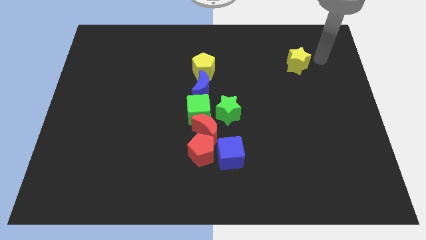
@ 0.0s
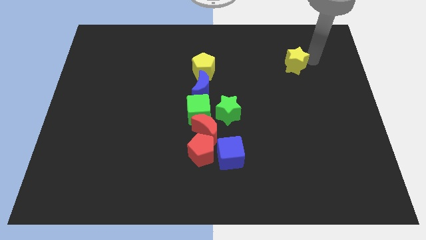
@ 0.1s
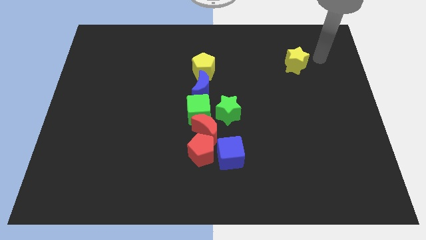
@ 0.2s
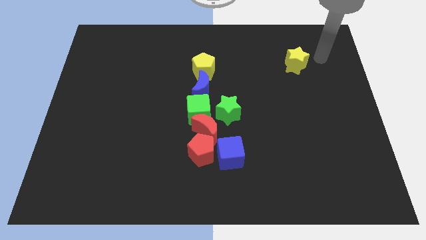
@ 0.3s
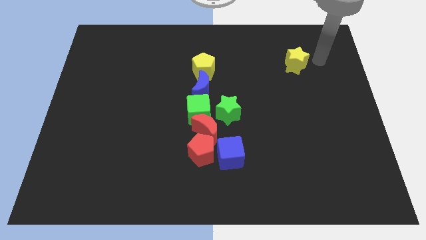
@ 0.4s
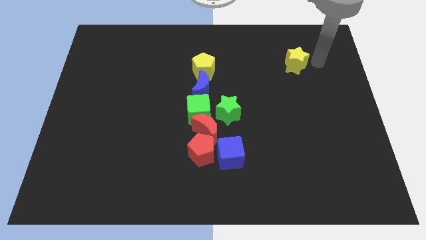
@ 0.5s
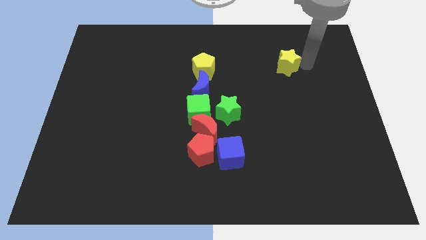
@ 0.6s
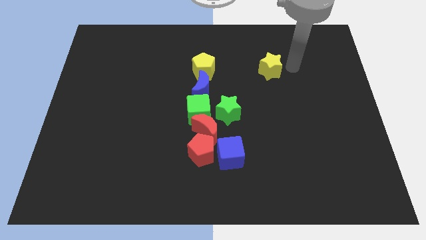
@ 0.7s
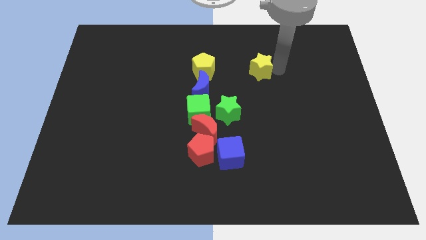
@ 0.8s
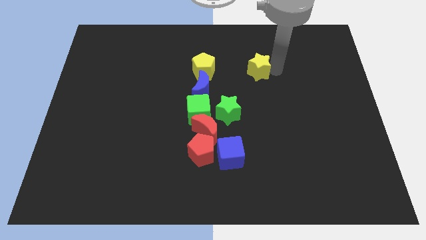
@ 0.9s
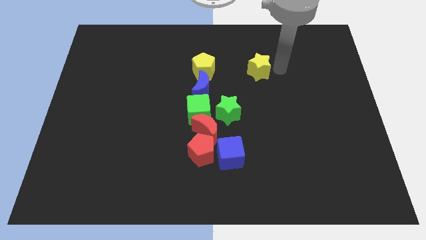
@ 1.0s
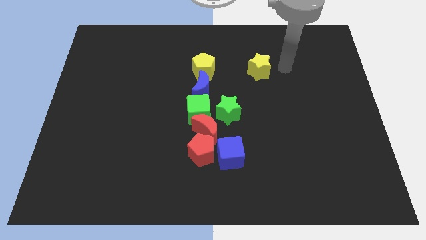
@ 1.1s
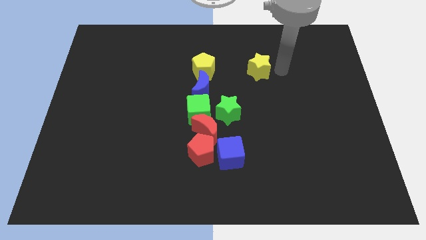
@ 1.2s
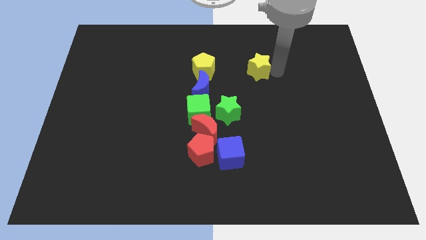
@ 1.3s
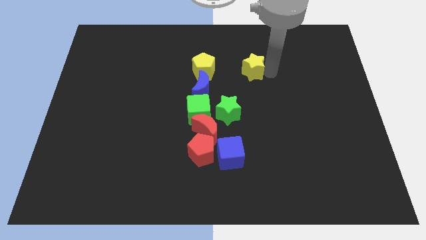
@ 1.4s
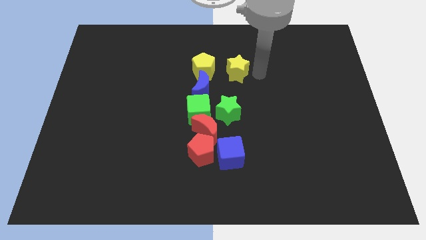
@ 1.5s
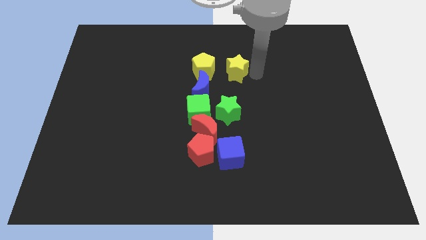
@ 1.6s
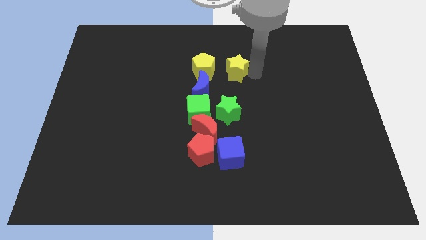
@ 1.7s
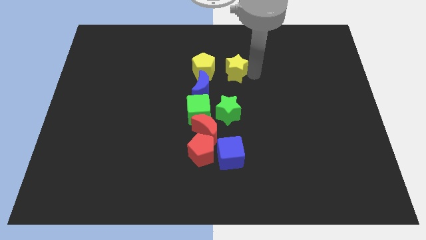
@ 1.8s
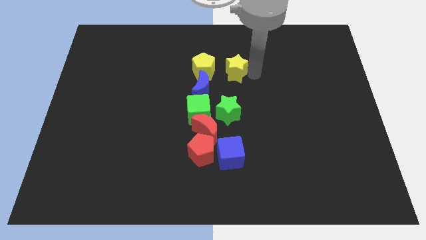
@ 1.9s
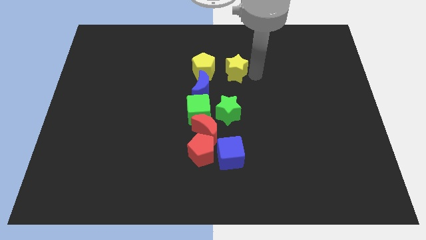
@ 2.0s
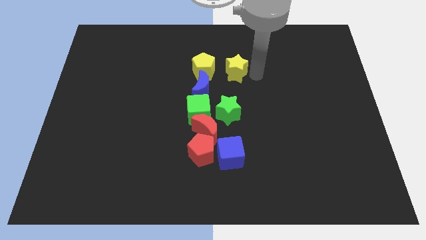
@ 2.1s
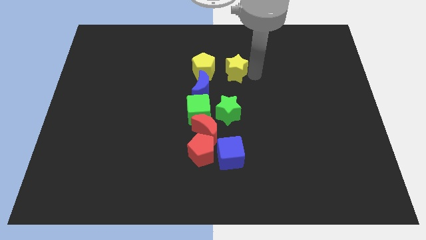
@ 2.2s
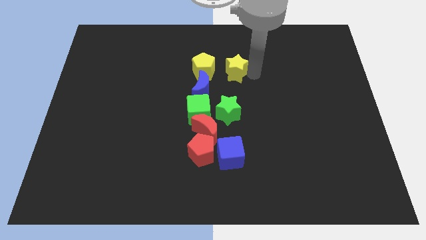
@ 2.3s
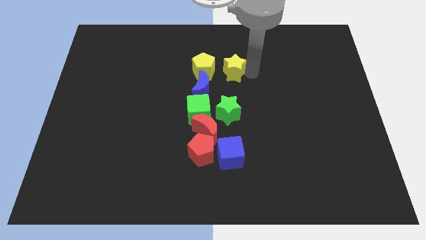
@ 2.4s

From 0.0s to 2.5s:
place the yellow star right to the yellow pentagon

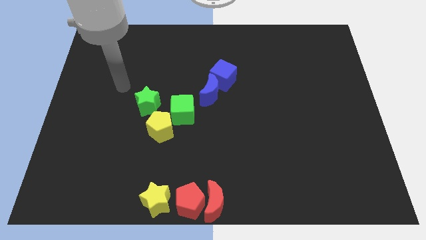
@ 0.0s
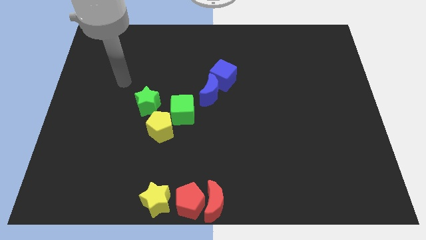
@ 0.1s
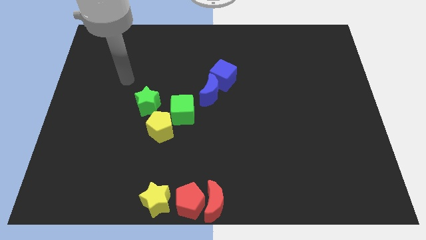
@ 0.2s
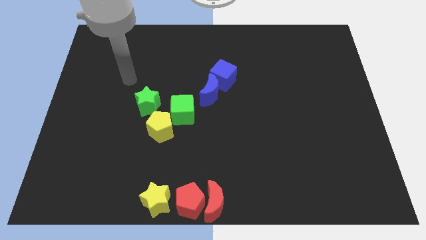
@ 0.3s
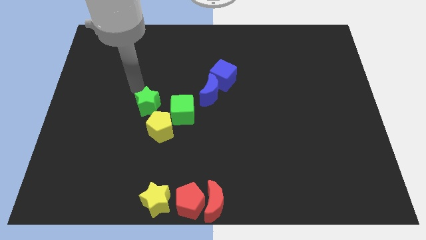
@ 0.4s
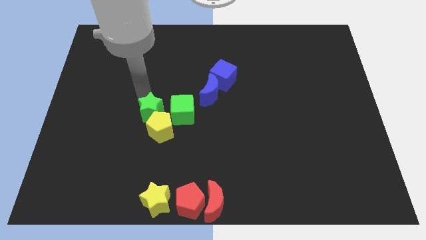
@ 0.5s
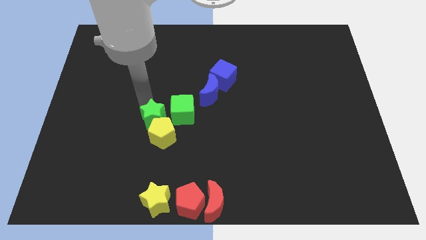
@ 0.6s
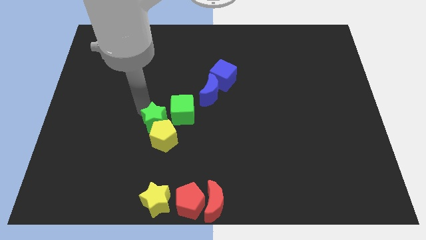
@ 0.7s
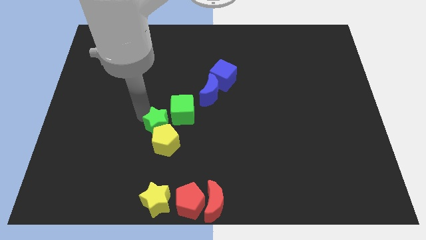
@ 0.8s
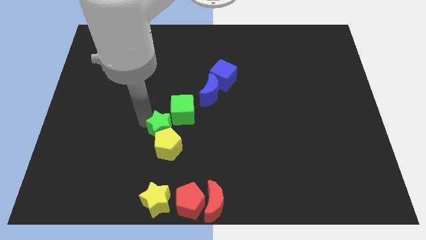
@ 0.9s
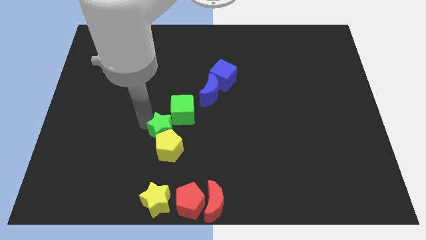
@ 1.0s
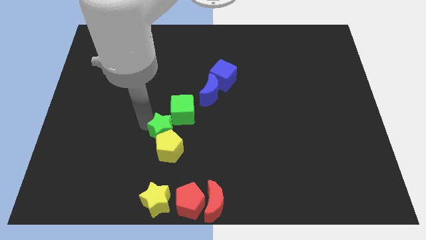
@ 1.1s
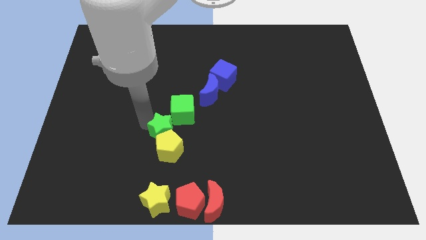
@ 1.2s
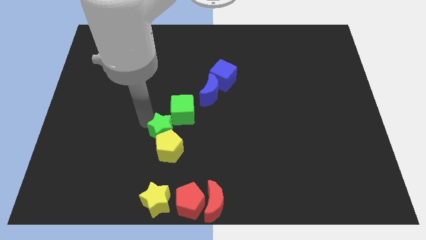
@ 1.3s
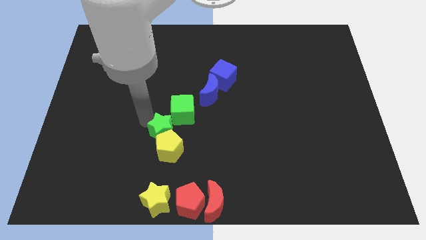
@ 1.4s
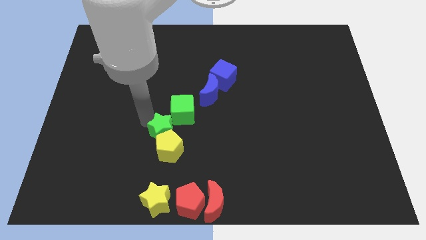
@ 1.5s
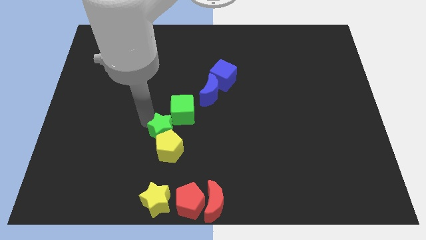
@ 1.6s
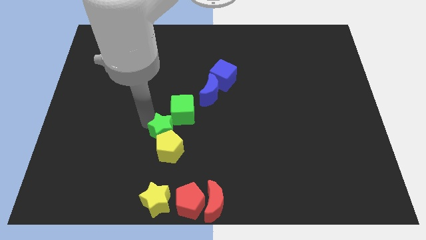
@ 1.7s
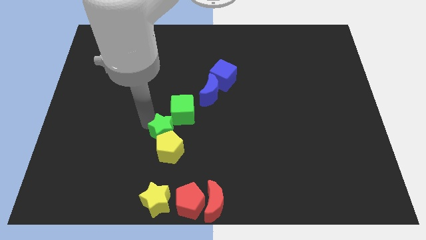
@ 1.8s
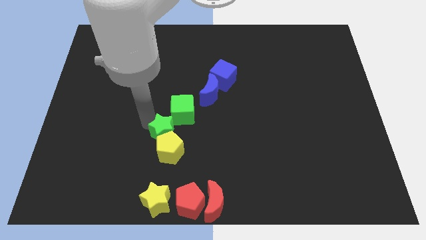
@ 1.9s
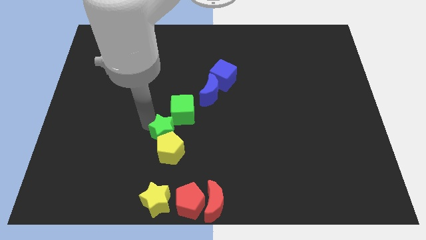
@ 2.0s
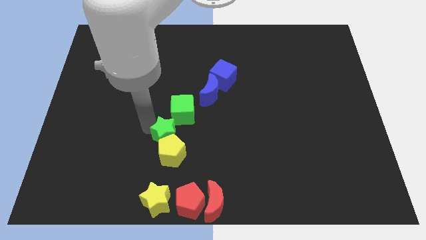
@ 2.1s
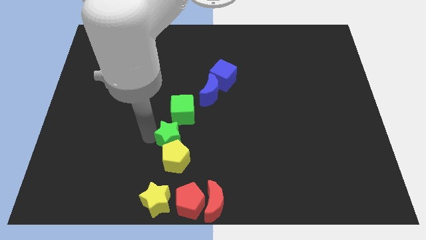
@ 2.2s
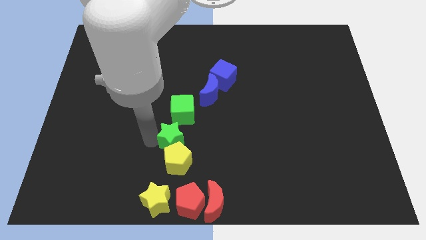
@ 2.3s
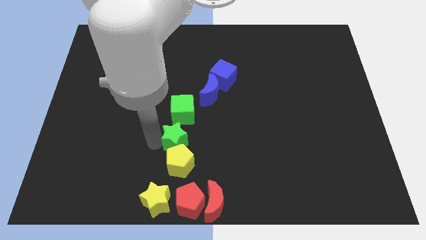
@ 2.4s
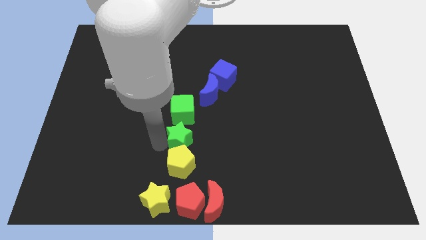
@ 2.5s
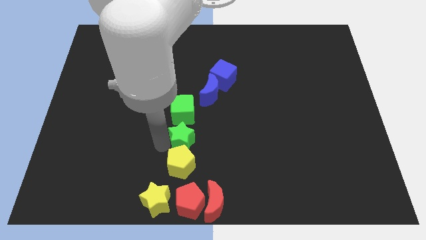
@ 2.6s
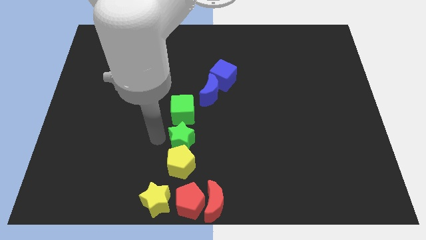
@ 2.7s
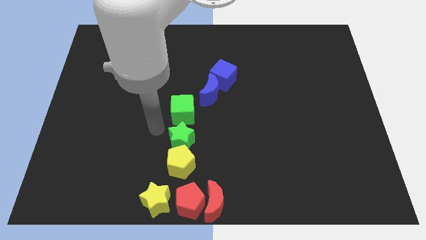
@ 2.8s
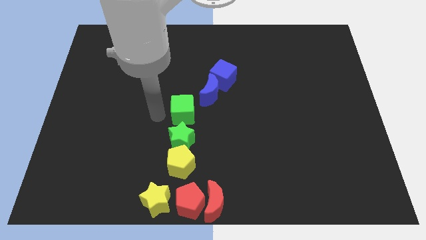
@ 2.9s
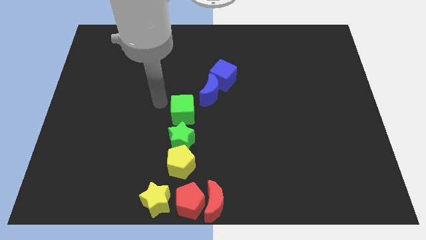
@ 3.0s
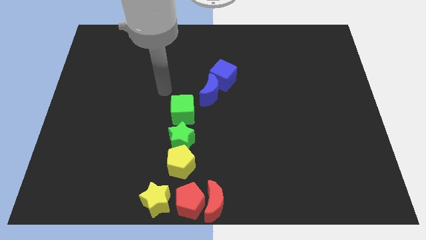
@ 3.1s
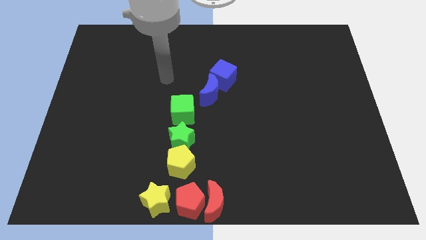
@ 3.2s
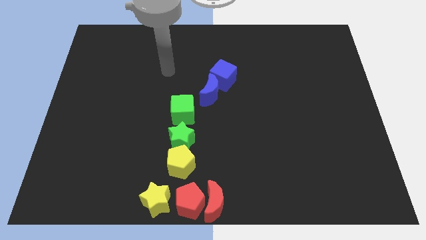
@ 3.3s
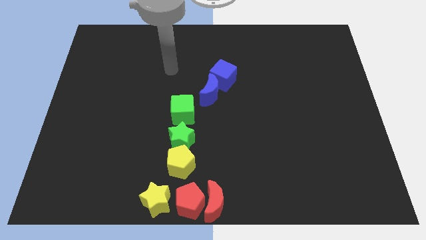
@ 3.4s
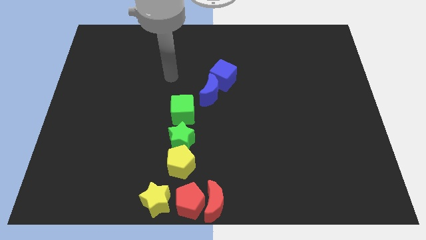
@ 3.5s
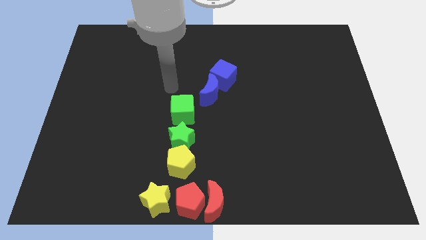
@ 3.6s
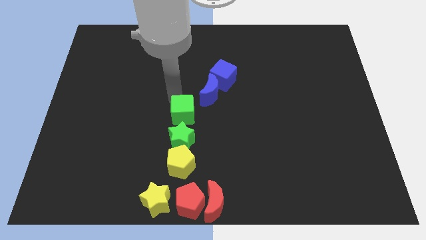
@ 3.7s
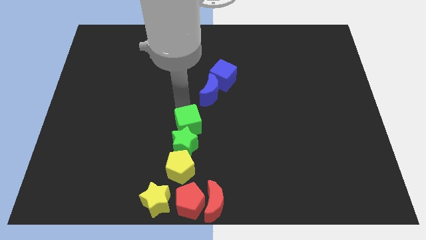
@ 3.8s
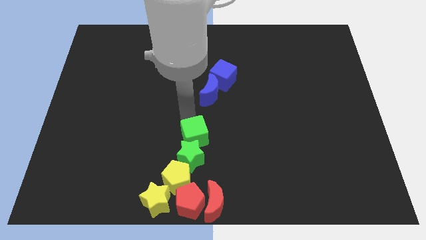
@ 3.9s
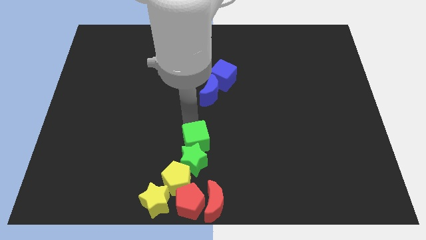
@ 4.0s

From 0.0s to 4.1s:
push the green star slightly downwards

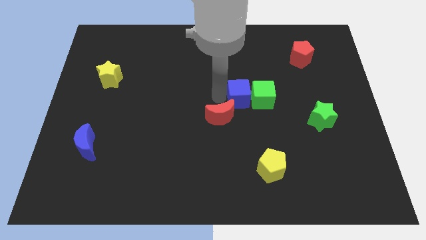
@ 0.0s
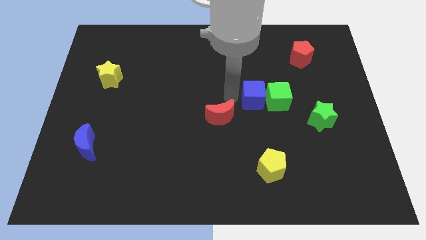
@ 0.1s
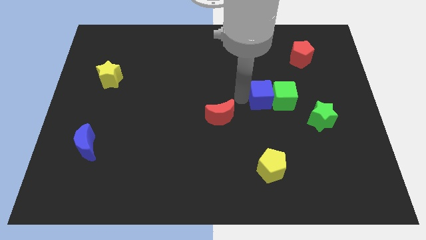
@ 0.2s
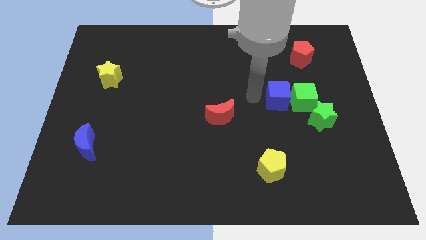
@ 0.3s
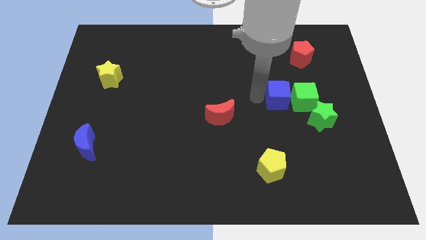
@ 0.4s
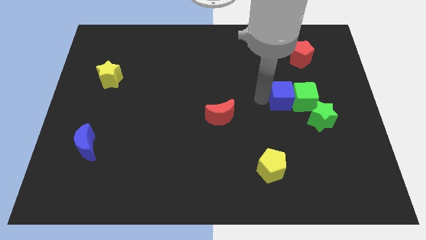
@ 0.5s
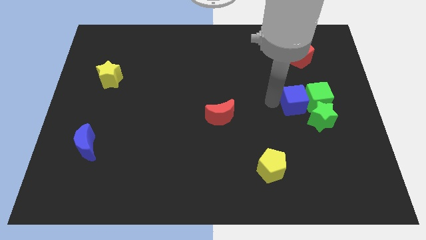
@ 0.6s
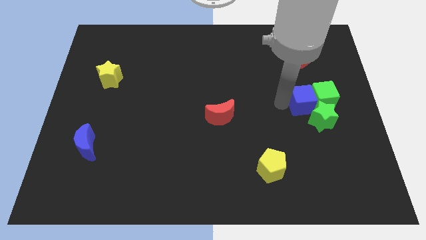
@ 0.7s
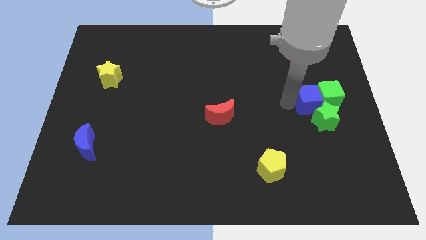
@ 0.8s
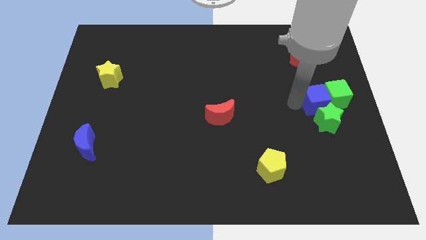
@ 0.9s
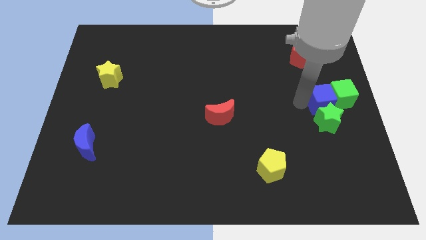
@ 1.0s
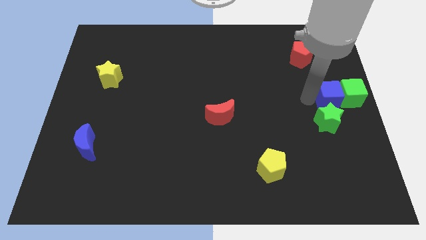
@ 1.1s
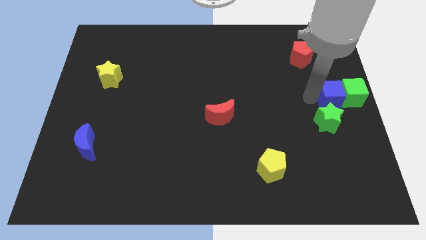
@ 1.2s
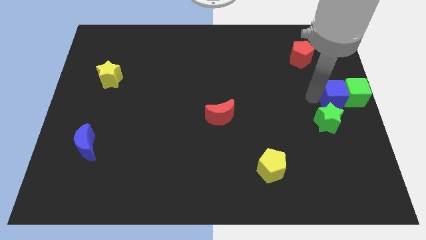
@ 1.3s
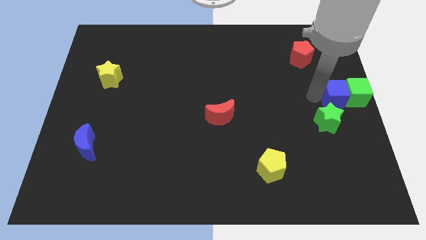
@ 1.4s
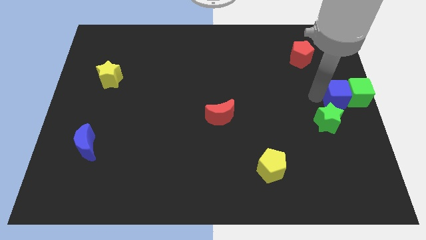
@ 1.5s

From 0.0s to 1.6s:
move the group of blocks to the right center

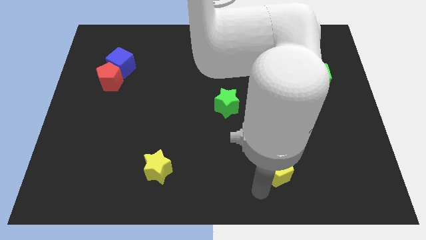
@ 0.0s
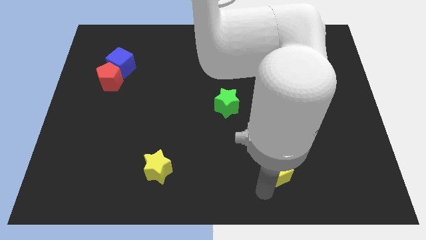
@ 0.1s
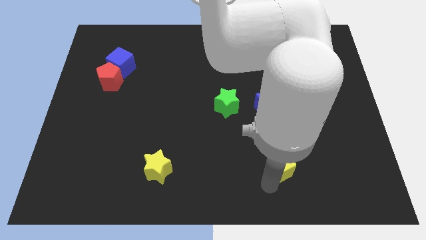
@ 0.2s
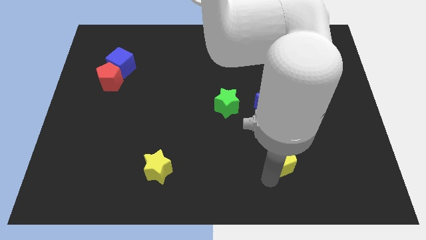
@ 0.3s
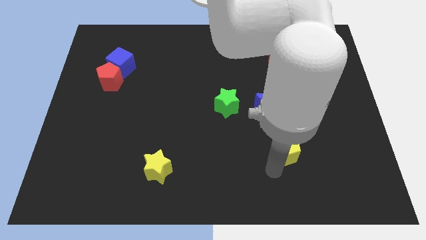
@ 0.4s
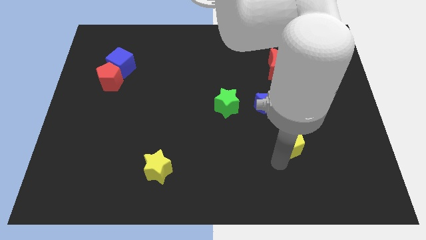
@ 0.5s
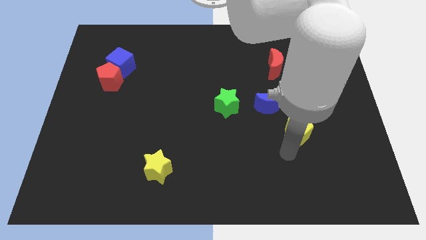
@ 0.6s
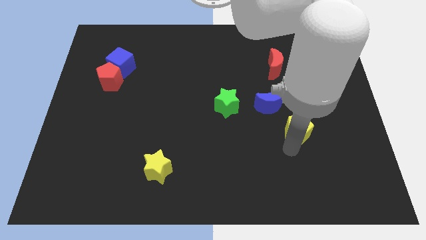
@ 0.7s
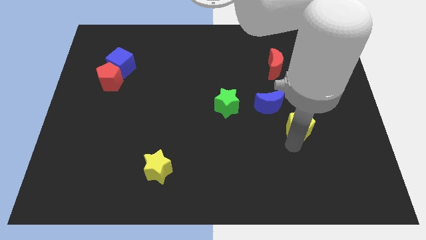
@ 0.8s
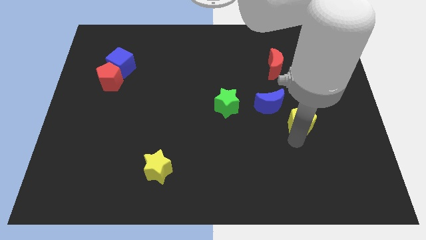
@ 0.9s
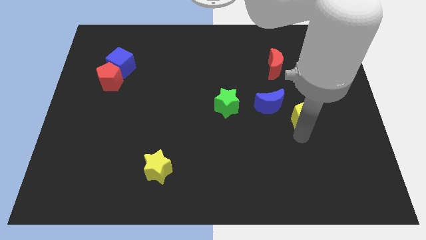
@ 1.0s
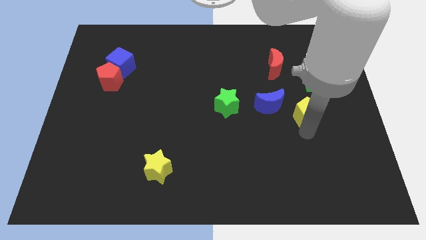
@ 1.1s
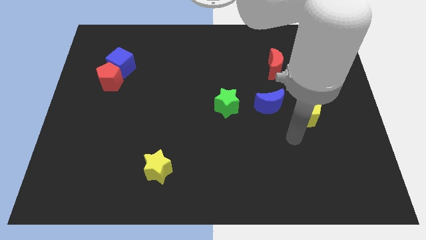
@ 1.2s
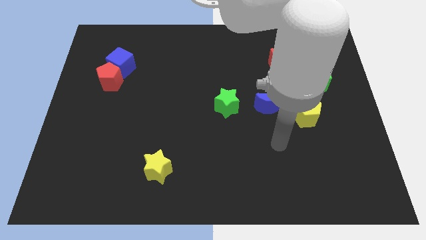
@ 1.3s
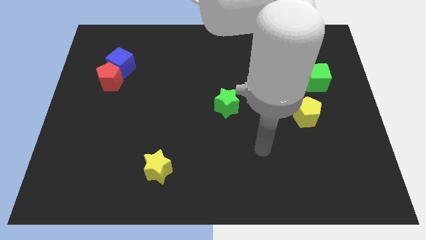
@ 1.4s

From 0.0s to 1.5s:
push the yellow pentagon near to the green cube
